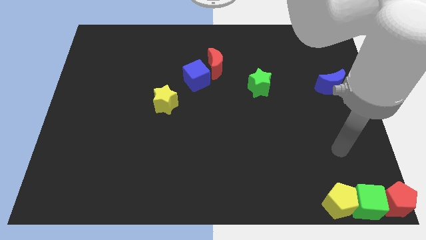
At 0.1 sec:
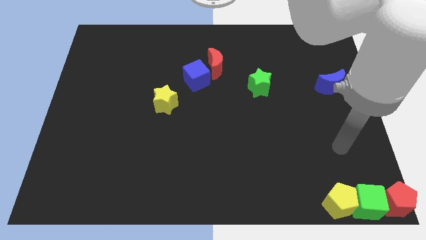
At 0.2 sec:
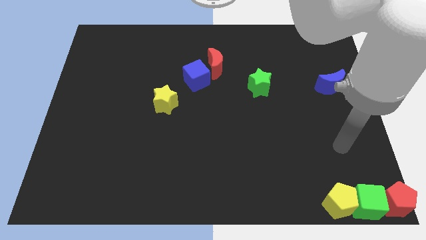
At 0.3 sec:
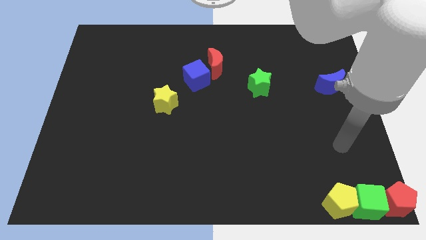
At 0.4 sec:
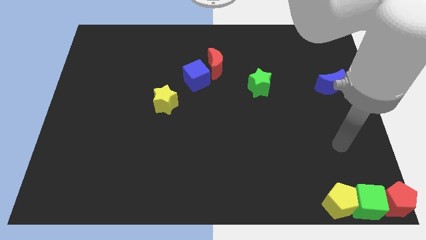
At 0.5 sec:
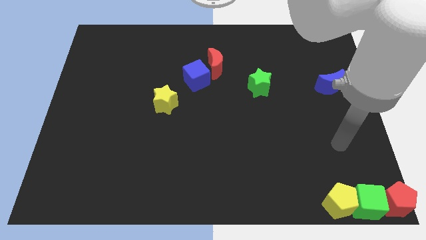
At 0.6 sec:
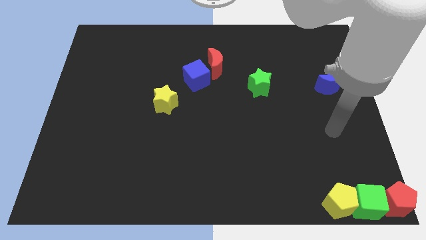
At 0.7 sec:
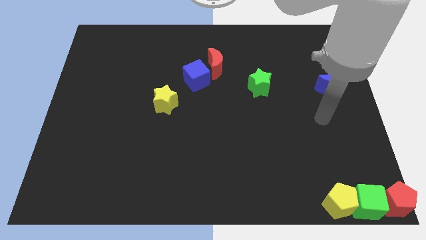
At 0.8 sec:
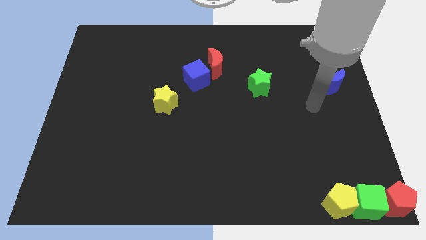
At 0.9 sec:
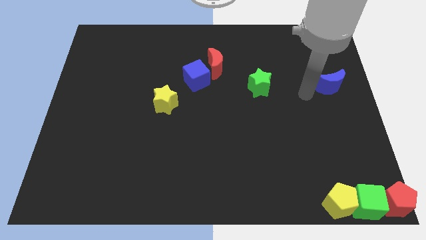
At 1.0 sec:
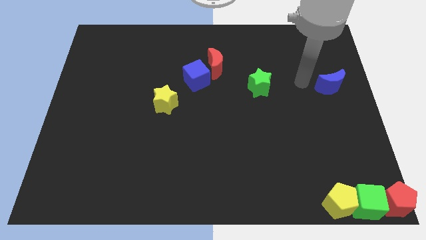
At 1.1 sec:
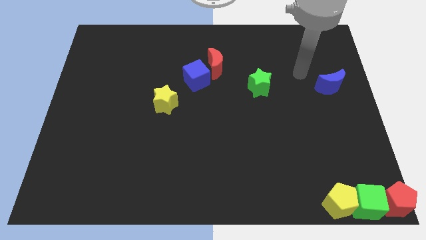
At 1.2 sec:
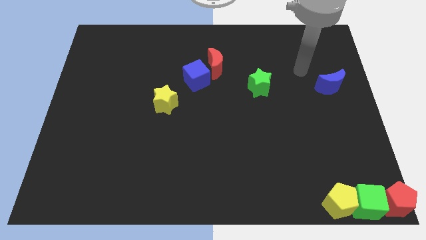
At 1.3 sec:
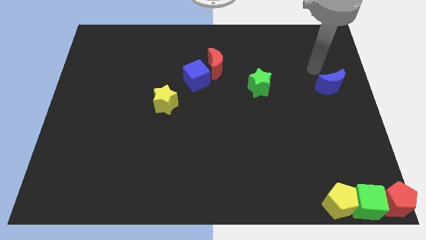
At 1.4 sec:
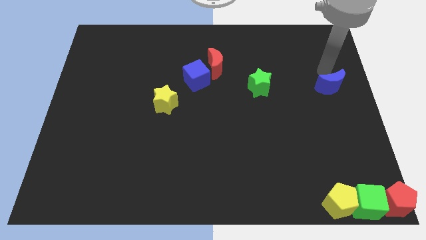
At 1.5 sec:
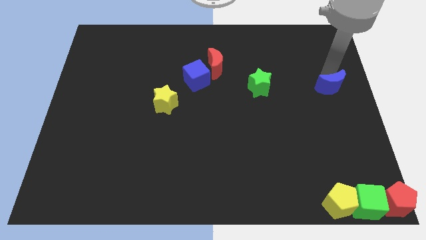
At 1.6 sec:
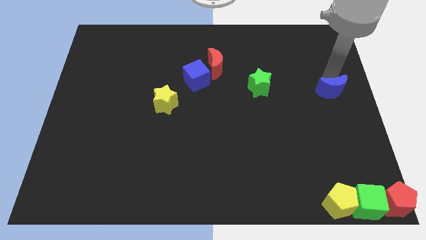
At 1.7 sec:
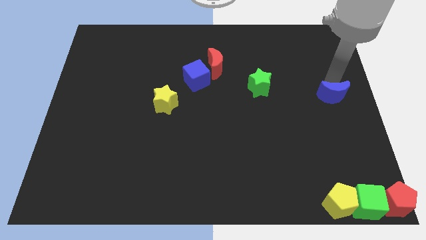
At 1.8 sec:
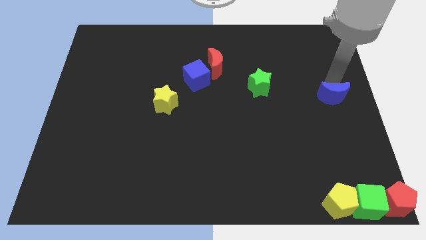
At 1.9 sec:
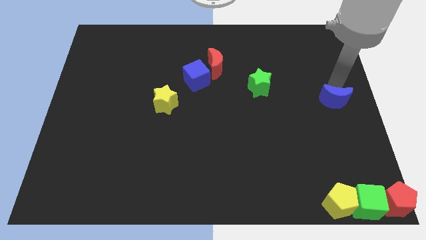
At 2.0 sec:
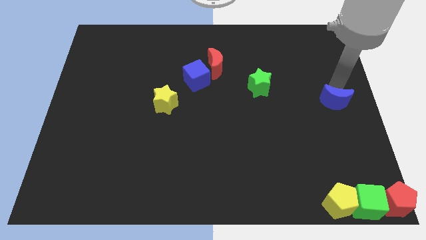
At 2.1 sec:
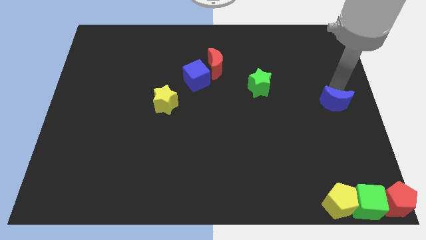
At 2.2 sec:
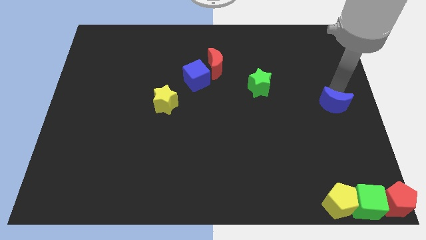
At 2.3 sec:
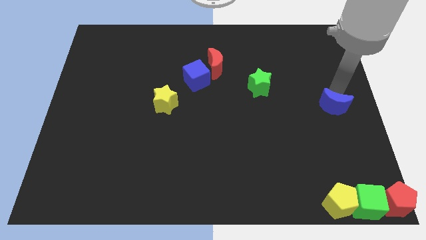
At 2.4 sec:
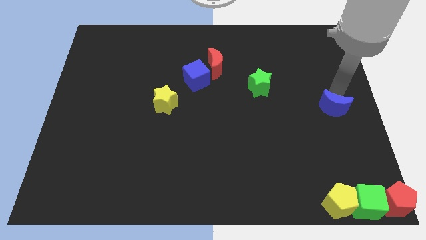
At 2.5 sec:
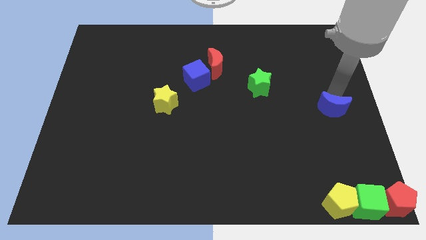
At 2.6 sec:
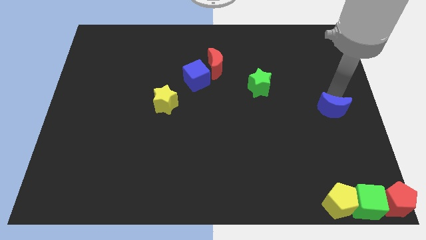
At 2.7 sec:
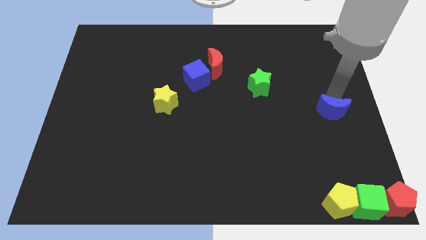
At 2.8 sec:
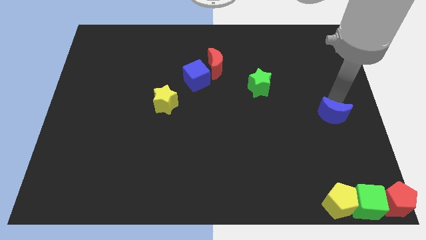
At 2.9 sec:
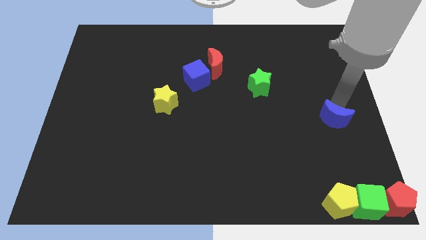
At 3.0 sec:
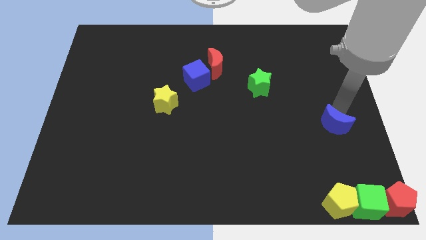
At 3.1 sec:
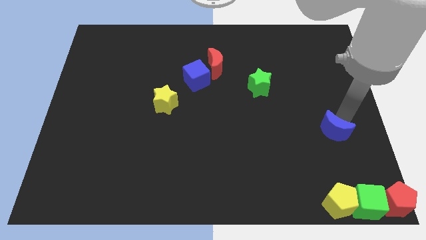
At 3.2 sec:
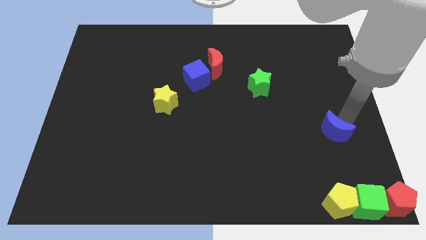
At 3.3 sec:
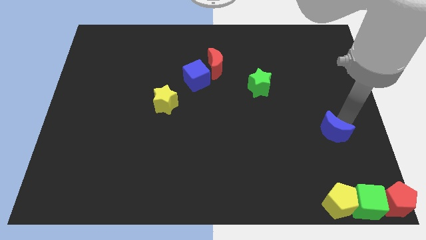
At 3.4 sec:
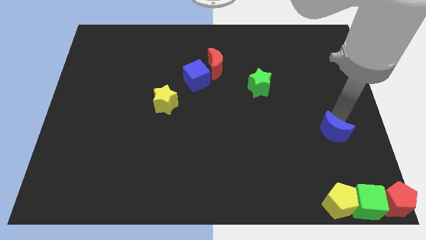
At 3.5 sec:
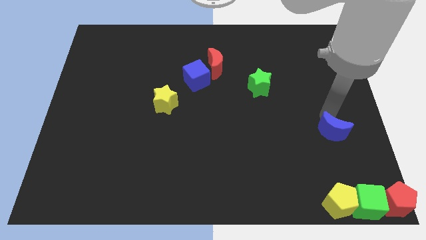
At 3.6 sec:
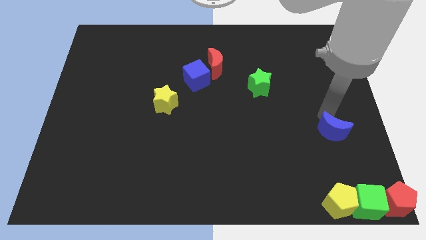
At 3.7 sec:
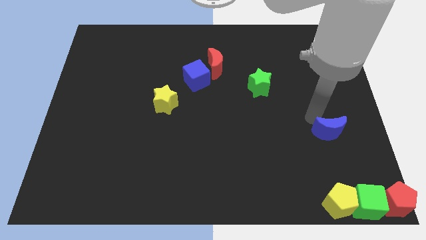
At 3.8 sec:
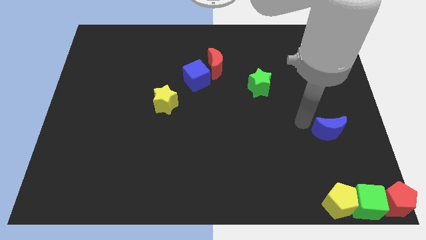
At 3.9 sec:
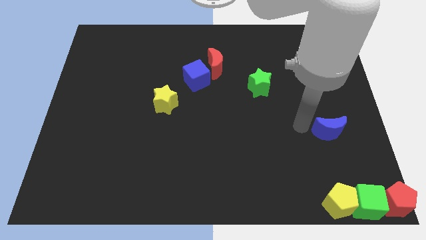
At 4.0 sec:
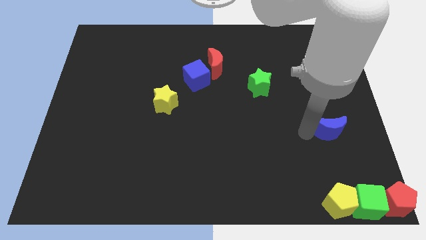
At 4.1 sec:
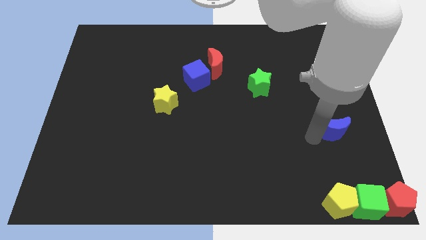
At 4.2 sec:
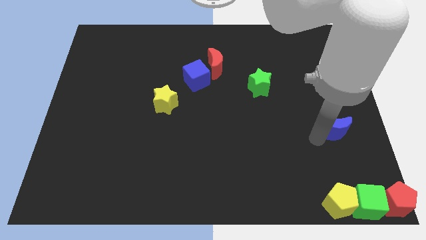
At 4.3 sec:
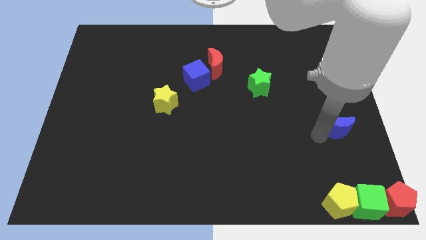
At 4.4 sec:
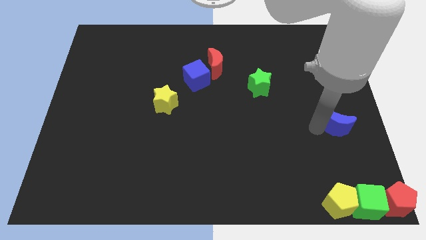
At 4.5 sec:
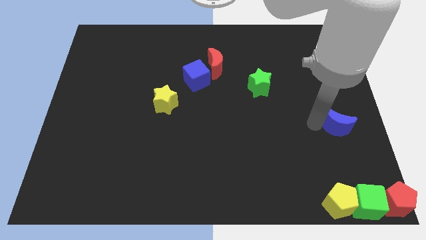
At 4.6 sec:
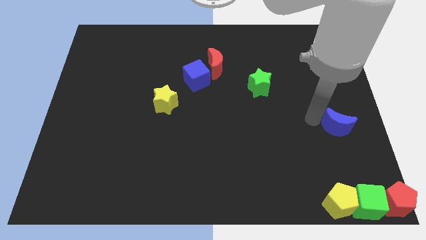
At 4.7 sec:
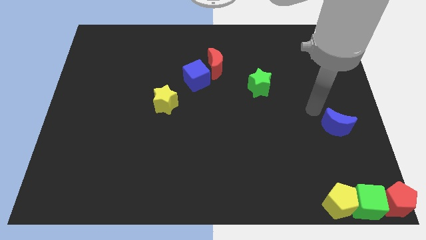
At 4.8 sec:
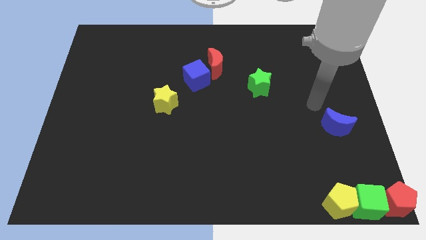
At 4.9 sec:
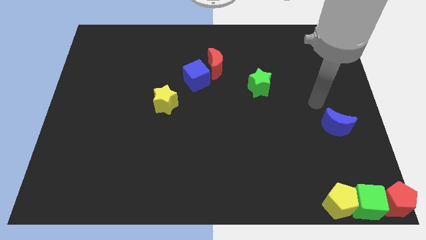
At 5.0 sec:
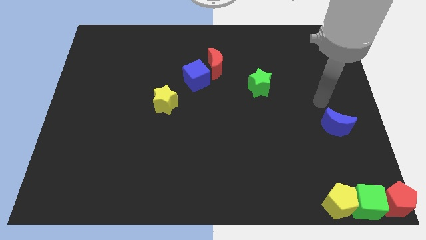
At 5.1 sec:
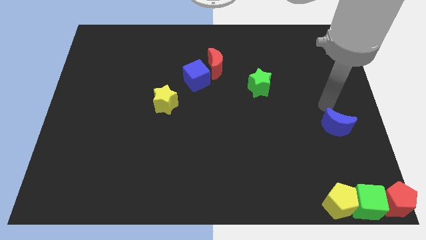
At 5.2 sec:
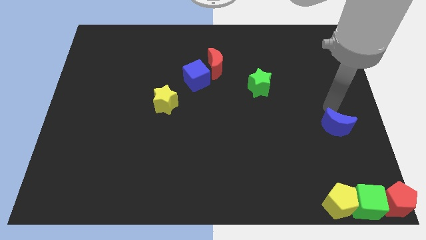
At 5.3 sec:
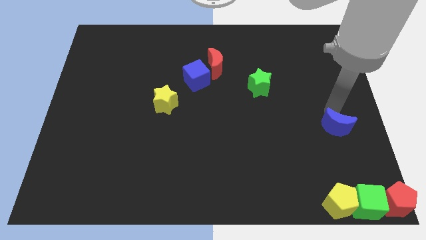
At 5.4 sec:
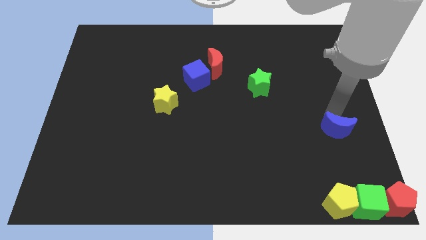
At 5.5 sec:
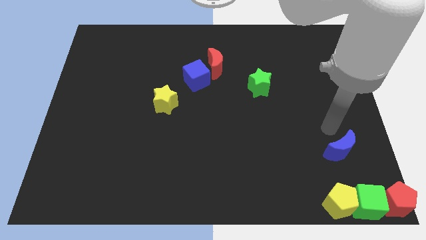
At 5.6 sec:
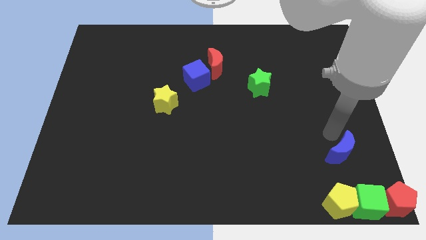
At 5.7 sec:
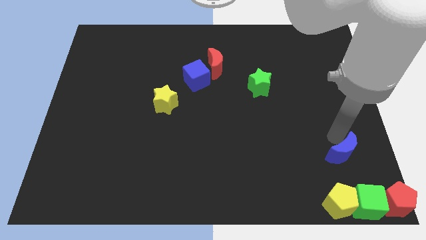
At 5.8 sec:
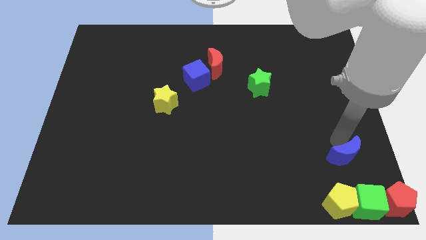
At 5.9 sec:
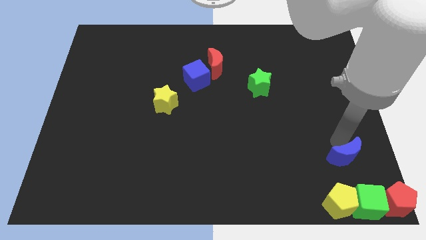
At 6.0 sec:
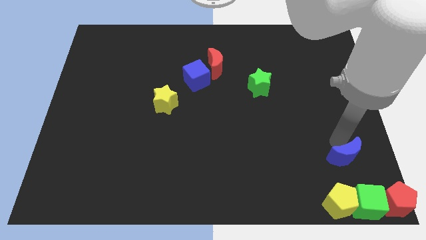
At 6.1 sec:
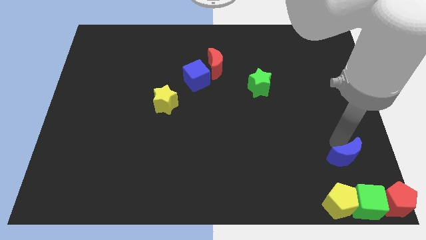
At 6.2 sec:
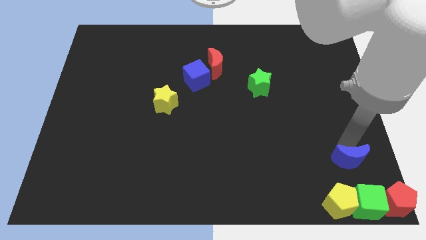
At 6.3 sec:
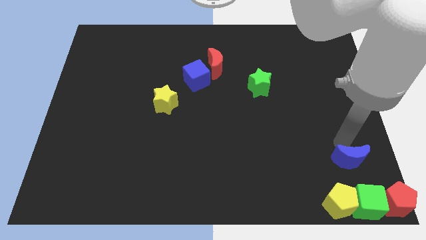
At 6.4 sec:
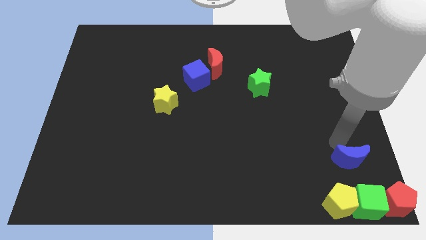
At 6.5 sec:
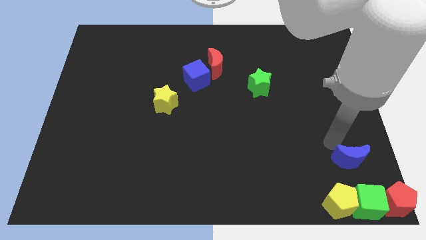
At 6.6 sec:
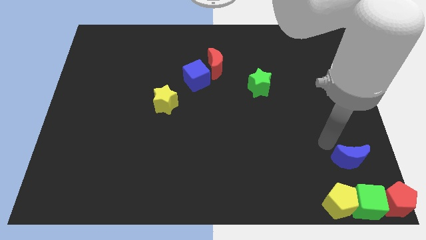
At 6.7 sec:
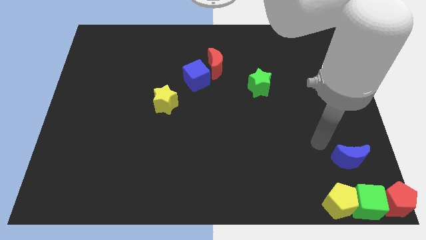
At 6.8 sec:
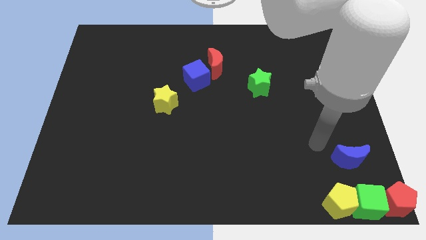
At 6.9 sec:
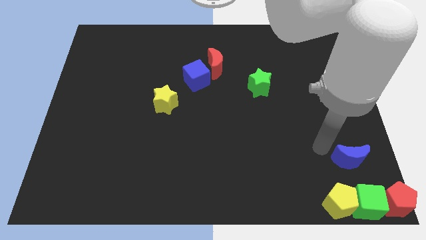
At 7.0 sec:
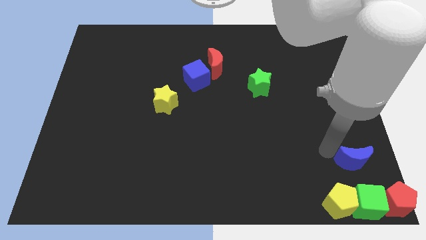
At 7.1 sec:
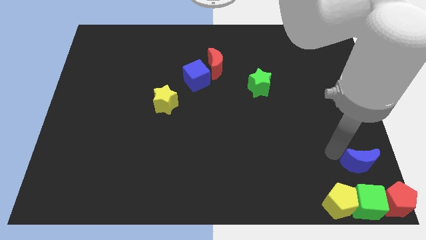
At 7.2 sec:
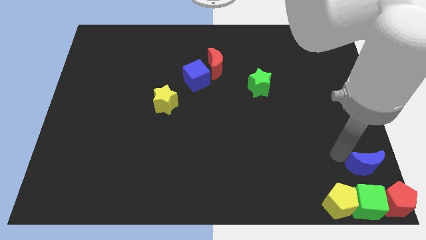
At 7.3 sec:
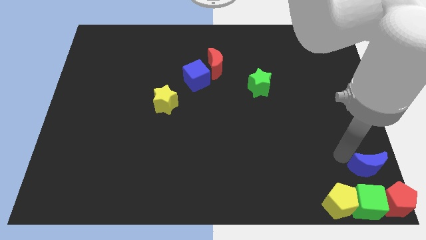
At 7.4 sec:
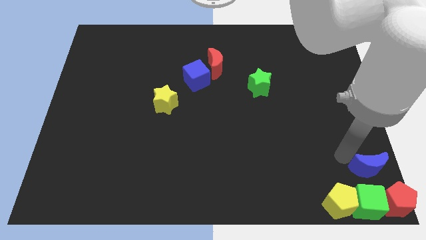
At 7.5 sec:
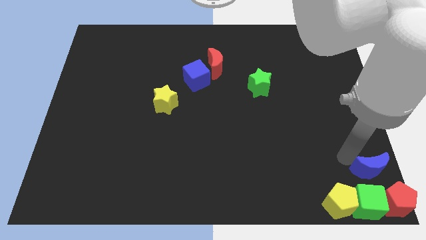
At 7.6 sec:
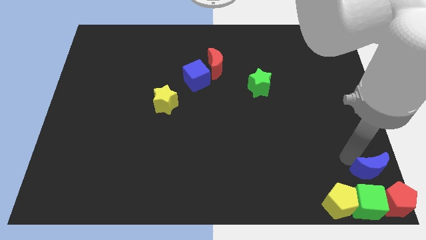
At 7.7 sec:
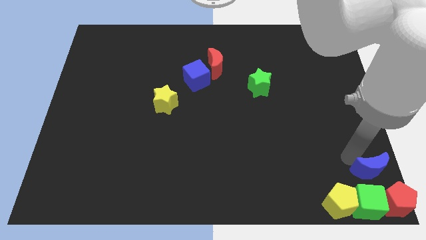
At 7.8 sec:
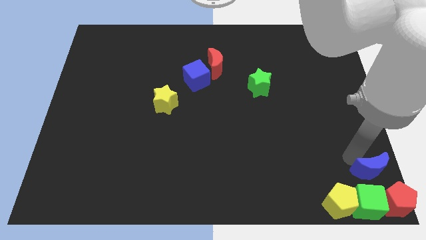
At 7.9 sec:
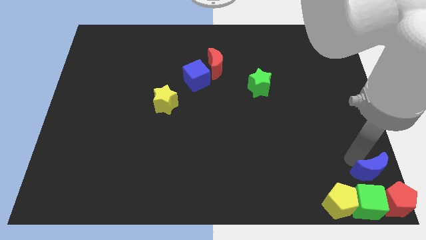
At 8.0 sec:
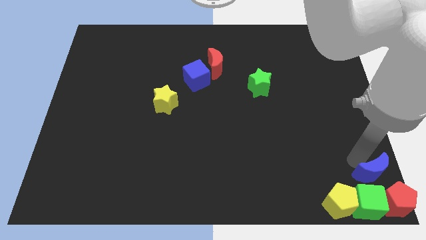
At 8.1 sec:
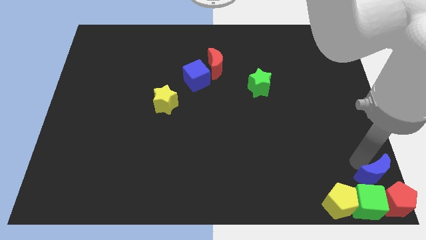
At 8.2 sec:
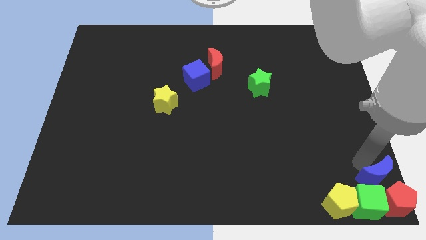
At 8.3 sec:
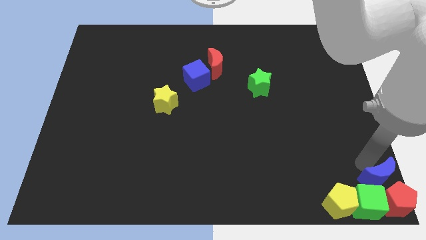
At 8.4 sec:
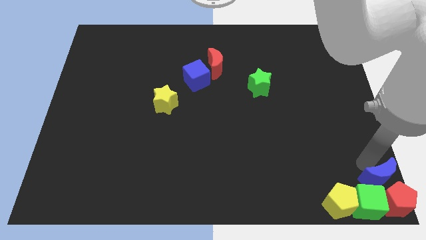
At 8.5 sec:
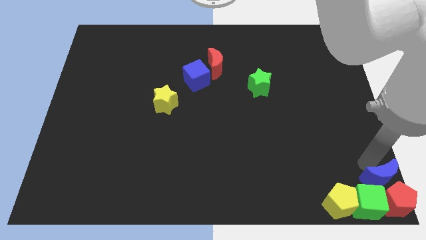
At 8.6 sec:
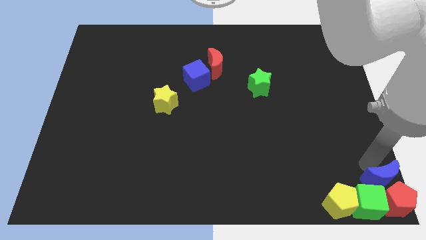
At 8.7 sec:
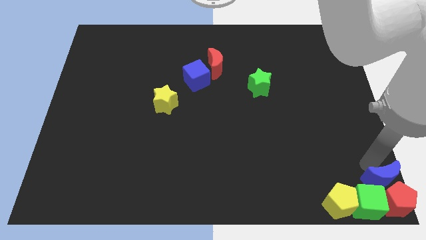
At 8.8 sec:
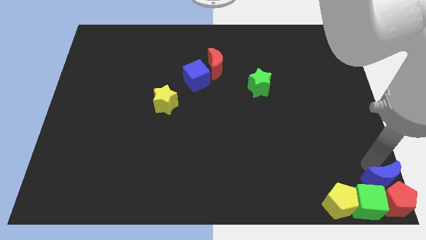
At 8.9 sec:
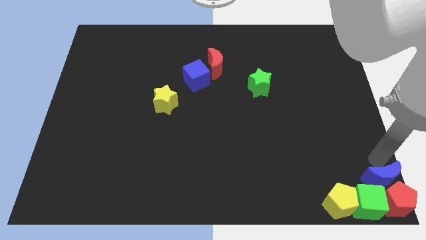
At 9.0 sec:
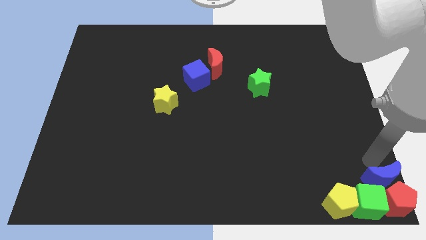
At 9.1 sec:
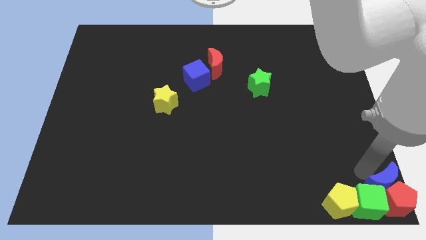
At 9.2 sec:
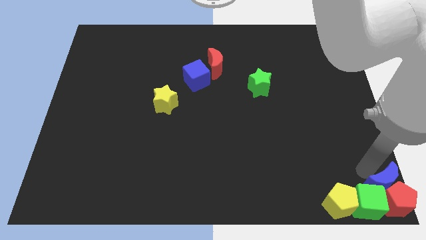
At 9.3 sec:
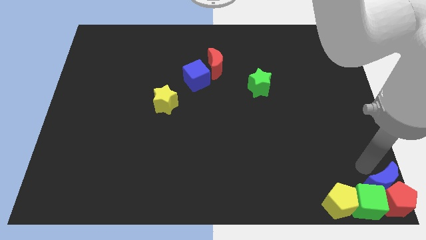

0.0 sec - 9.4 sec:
place group of blocks at the top right corner of the board
